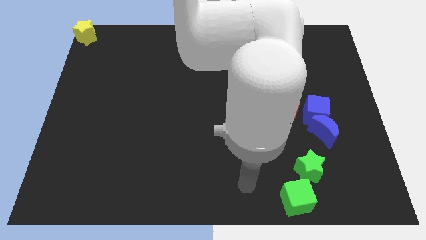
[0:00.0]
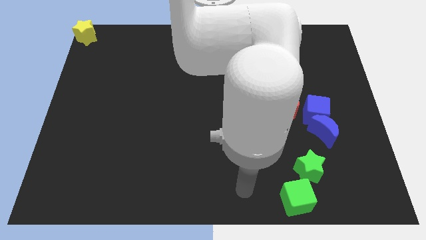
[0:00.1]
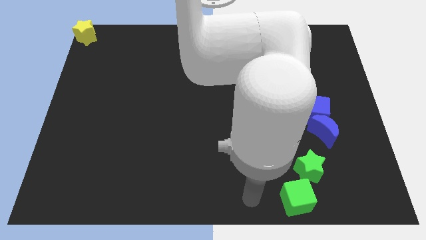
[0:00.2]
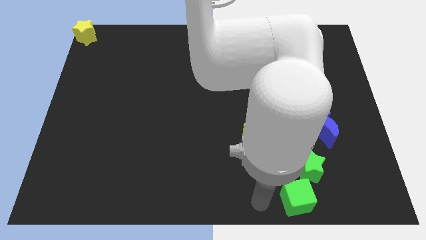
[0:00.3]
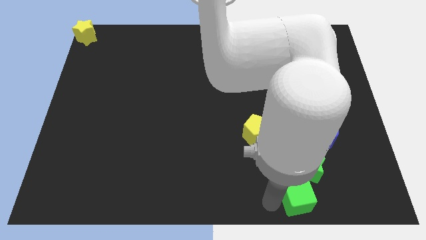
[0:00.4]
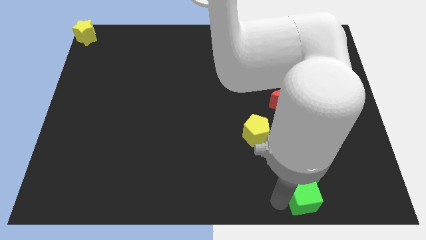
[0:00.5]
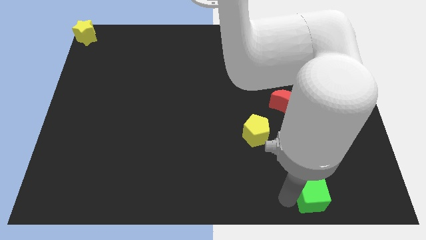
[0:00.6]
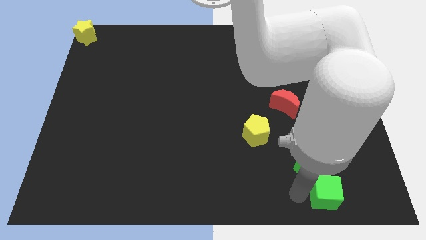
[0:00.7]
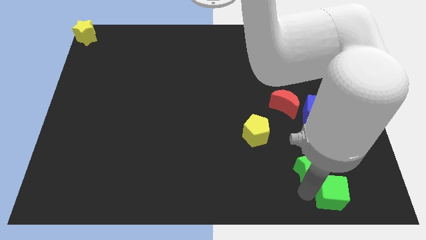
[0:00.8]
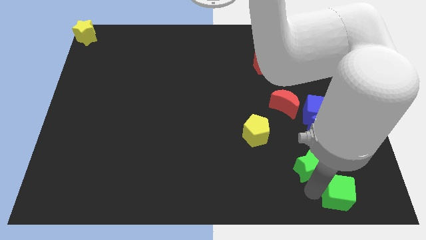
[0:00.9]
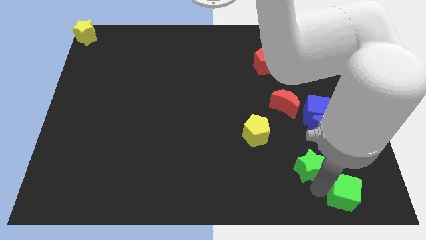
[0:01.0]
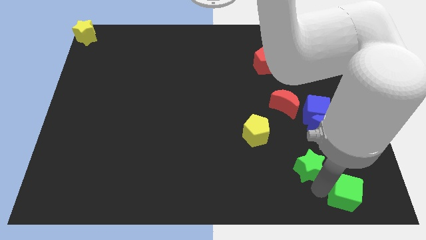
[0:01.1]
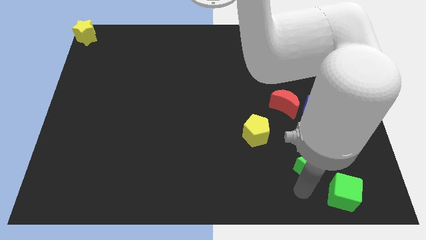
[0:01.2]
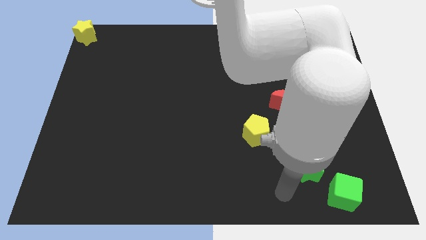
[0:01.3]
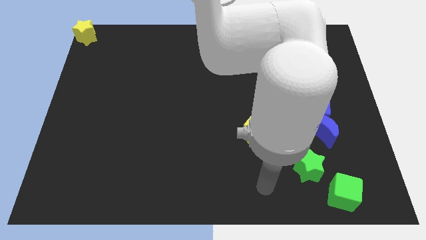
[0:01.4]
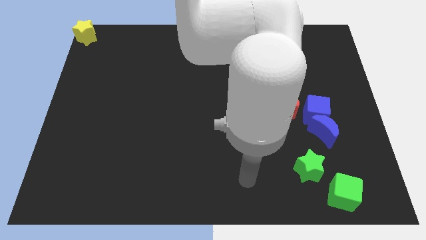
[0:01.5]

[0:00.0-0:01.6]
move the green cube at the bottom right side of the green star

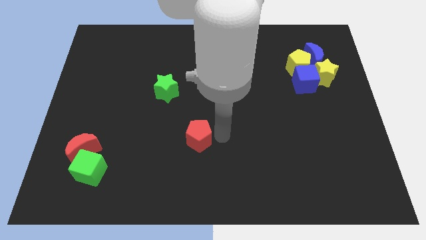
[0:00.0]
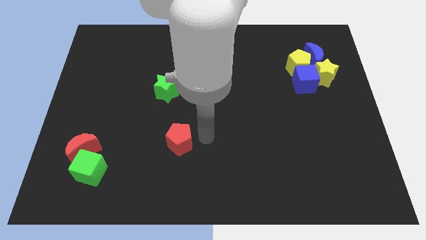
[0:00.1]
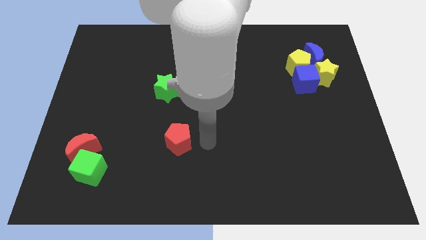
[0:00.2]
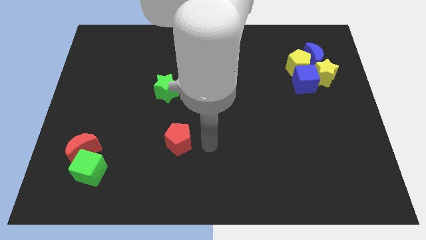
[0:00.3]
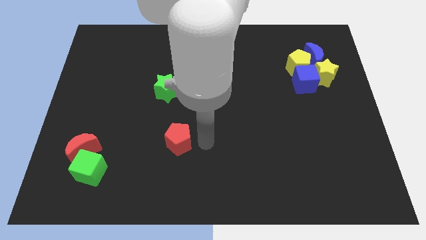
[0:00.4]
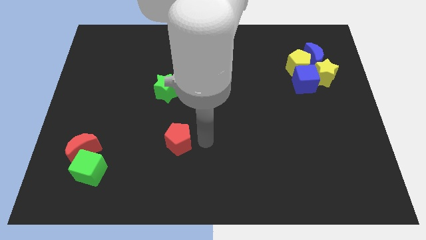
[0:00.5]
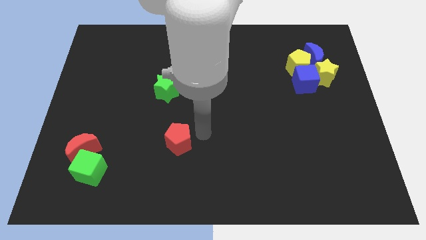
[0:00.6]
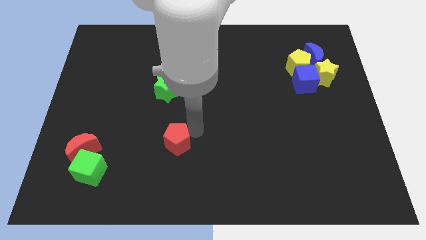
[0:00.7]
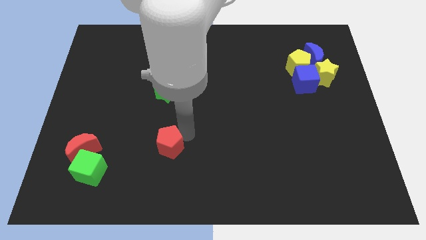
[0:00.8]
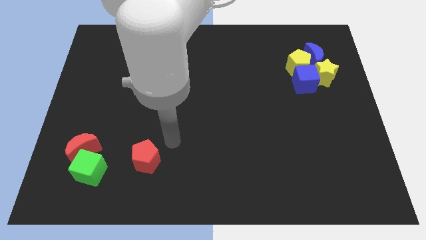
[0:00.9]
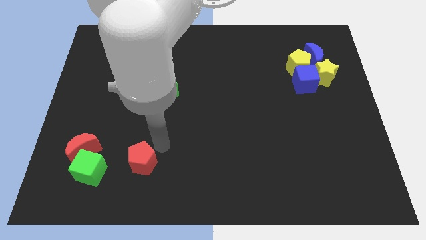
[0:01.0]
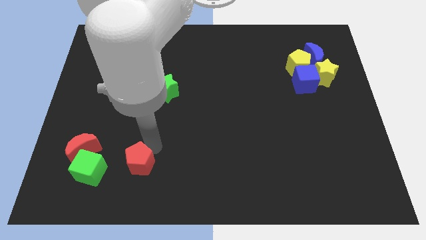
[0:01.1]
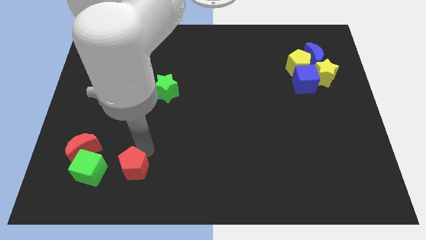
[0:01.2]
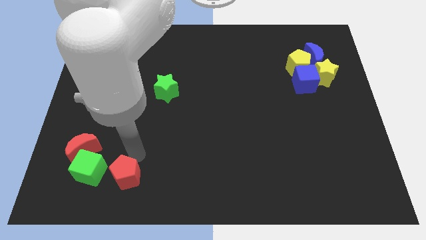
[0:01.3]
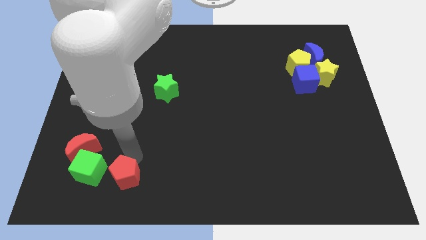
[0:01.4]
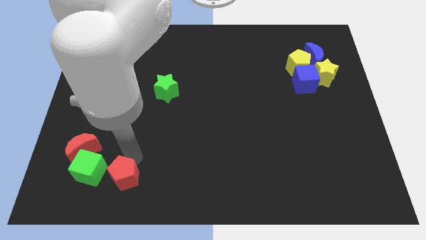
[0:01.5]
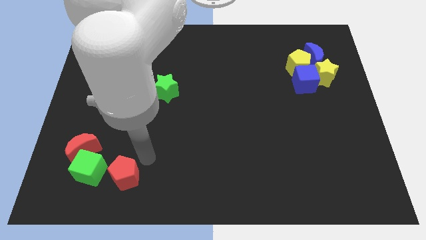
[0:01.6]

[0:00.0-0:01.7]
place the red pentagon to the right of the green cube

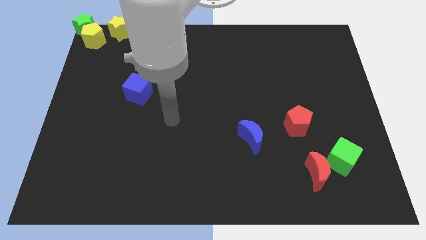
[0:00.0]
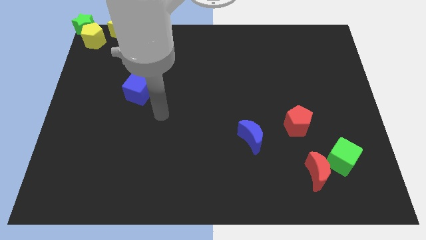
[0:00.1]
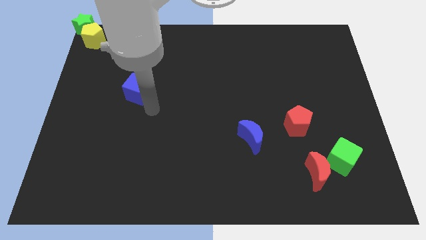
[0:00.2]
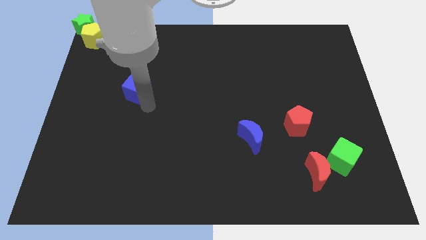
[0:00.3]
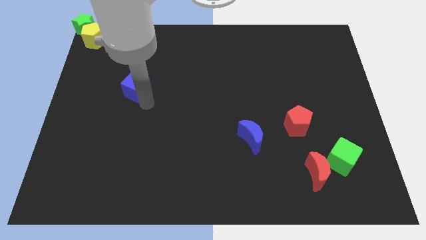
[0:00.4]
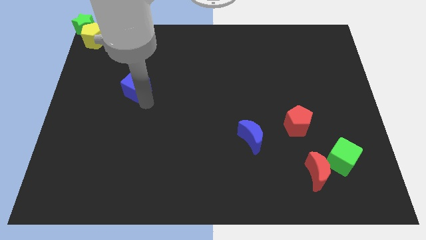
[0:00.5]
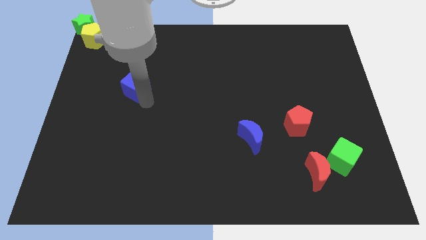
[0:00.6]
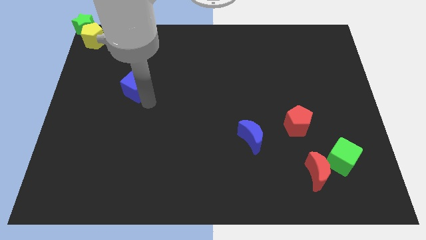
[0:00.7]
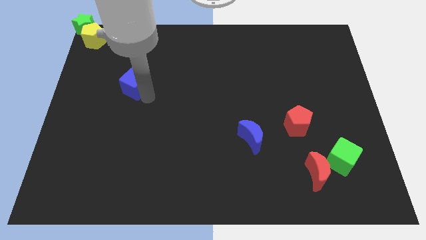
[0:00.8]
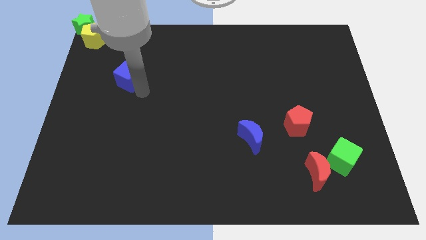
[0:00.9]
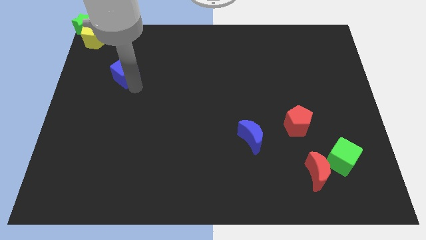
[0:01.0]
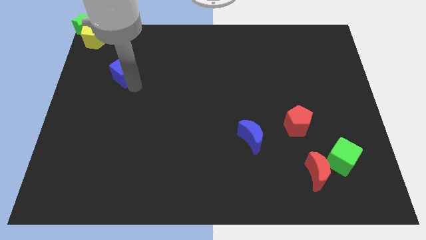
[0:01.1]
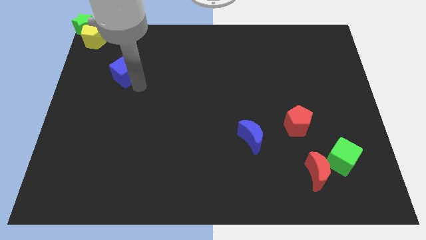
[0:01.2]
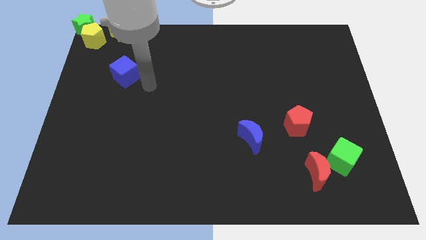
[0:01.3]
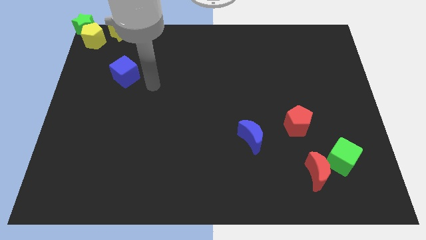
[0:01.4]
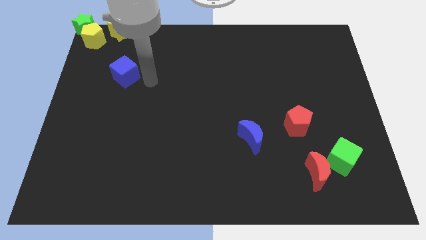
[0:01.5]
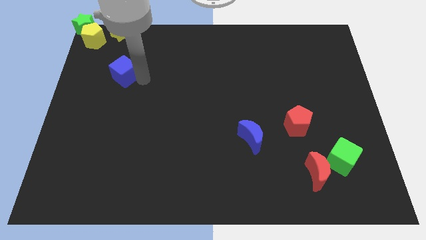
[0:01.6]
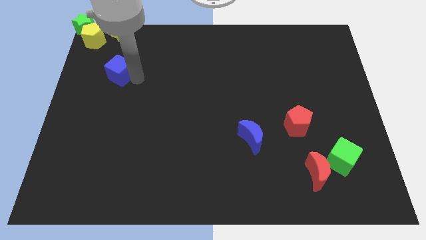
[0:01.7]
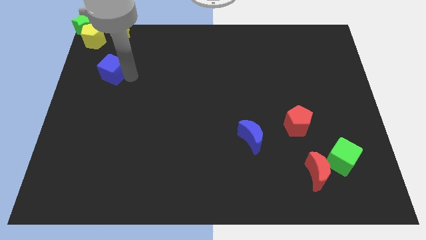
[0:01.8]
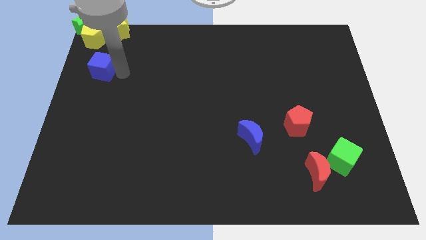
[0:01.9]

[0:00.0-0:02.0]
drag the blue cube towards the yellow pentagon

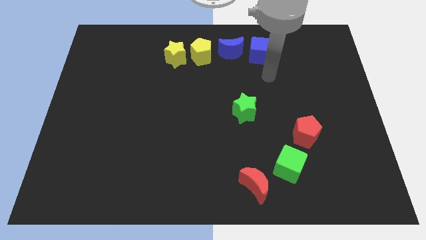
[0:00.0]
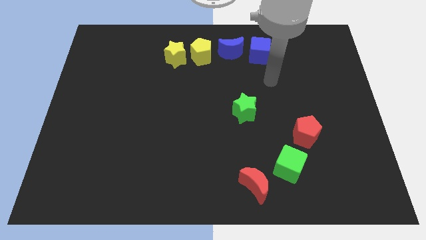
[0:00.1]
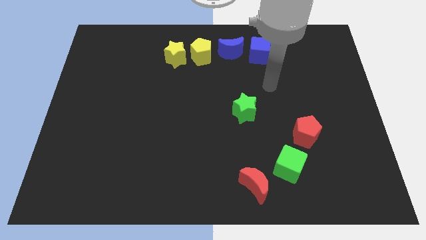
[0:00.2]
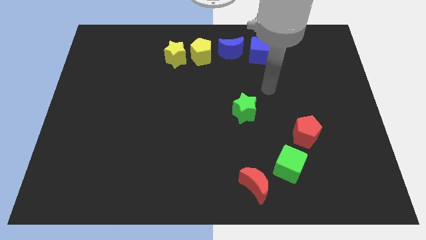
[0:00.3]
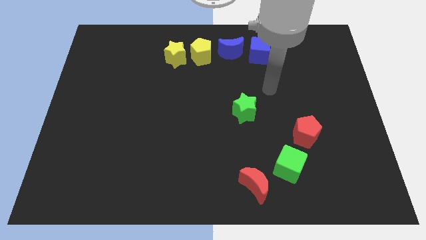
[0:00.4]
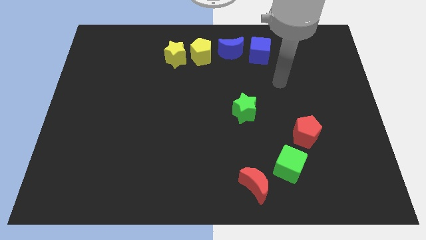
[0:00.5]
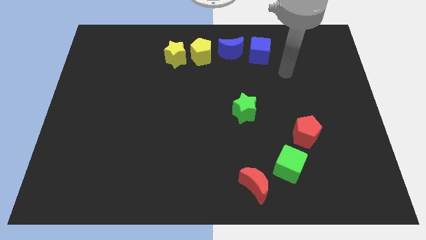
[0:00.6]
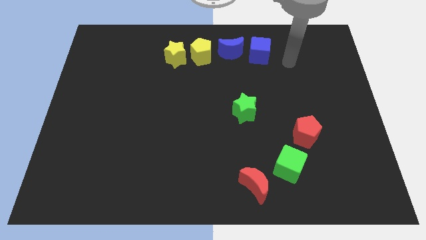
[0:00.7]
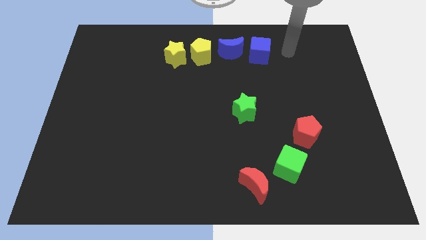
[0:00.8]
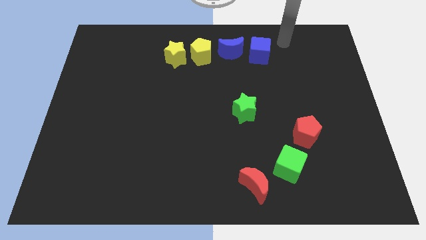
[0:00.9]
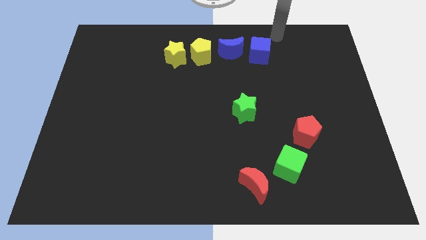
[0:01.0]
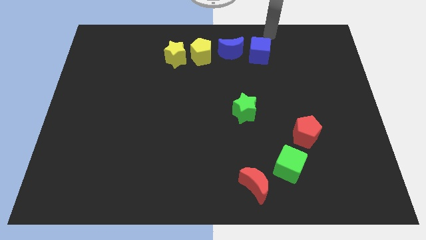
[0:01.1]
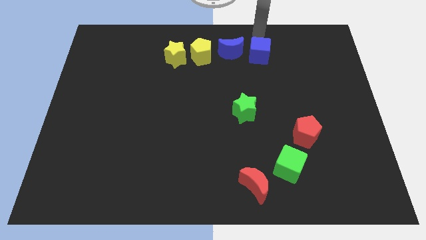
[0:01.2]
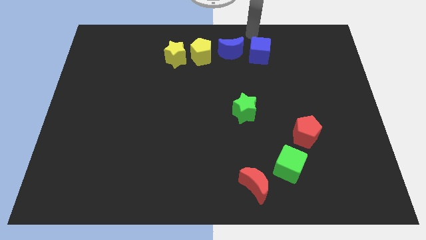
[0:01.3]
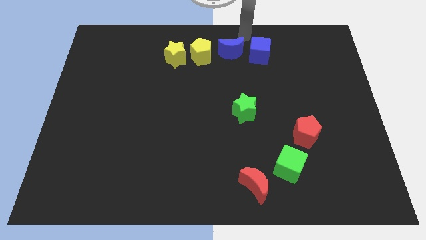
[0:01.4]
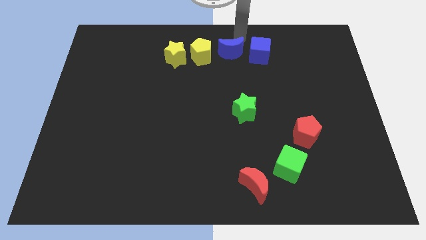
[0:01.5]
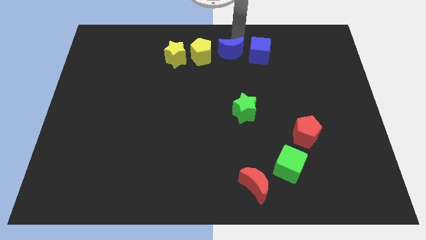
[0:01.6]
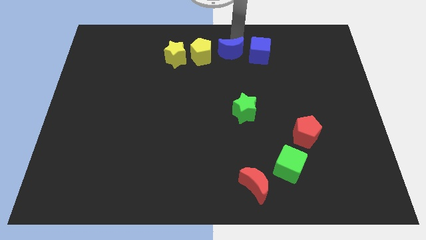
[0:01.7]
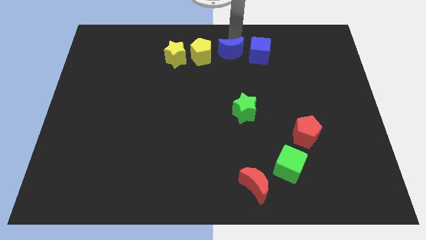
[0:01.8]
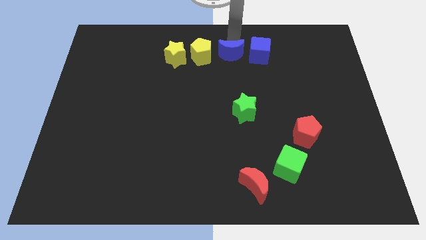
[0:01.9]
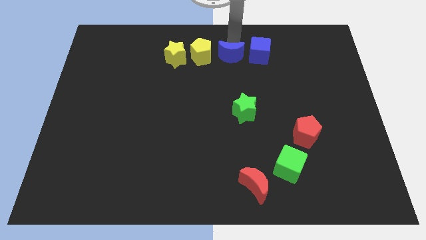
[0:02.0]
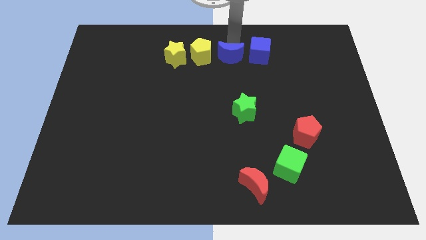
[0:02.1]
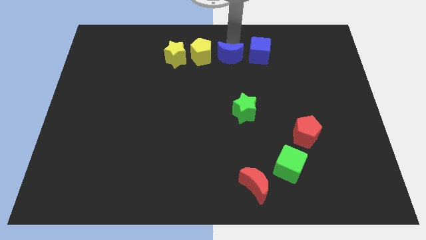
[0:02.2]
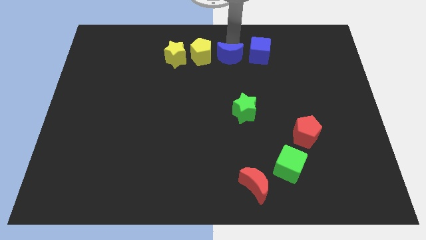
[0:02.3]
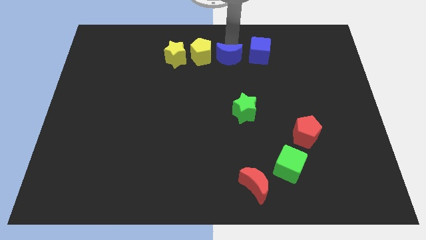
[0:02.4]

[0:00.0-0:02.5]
slightly push the blue moon towards bottom

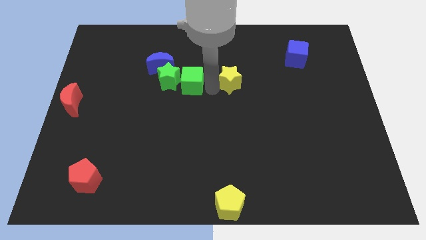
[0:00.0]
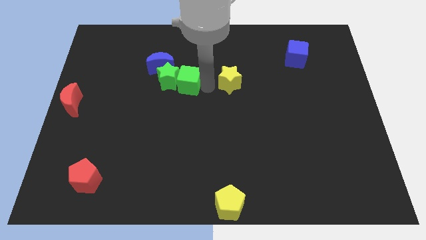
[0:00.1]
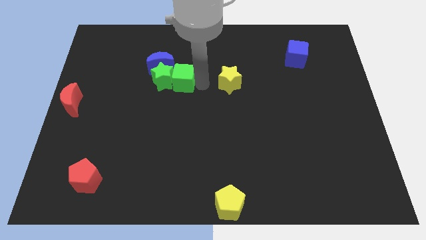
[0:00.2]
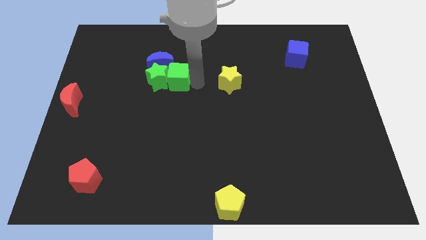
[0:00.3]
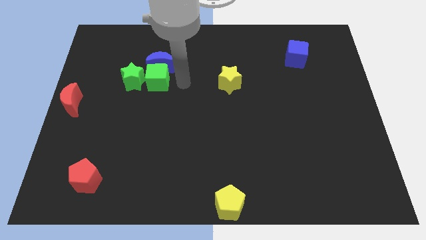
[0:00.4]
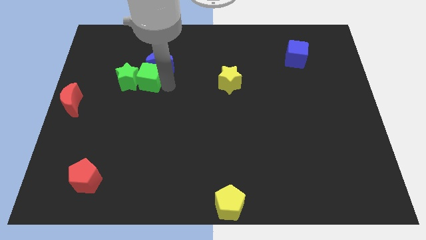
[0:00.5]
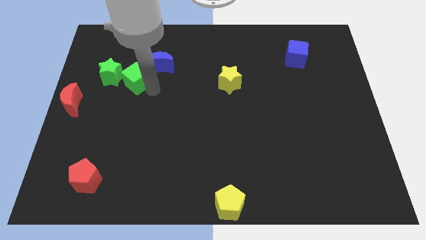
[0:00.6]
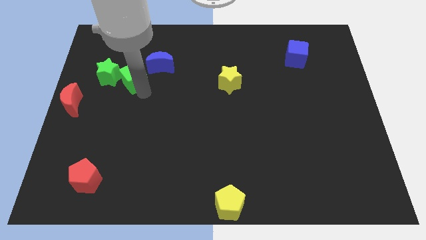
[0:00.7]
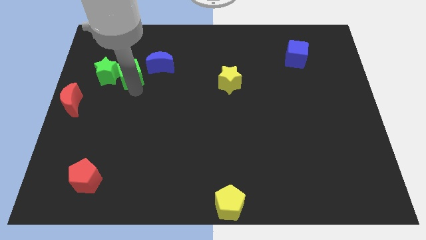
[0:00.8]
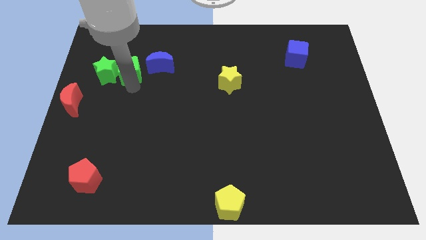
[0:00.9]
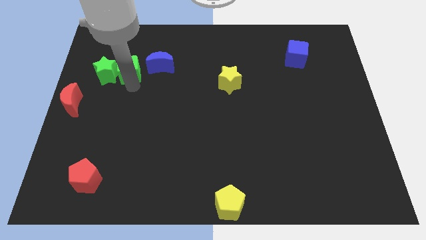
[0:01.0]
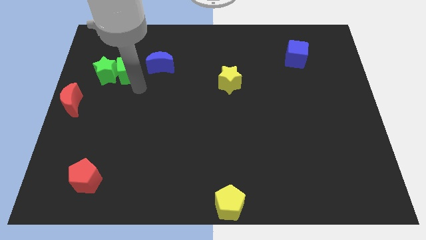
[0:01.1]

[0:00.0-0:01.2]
slide the green blocks to center left
